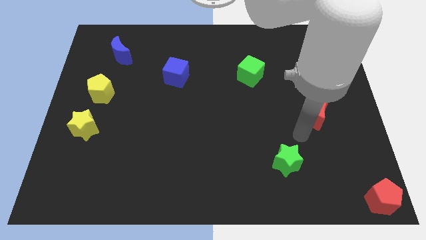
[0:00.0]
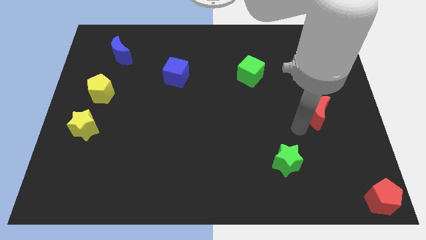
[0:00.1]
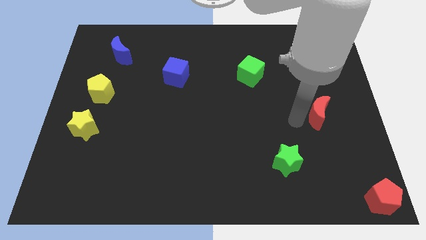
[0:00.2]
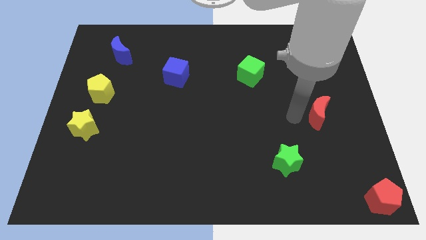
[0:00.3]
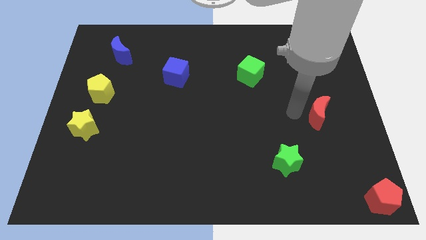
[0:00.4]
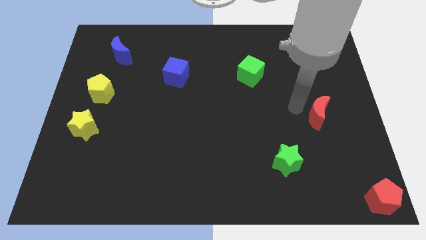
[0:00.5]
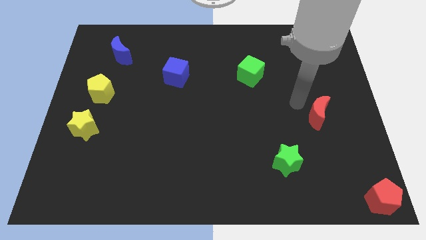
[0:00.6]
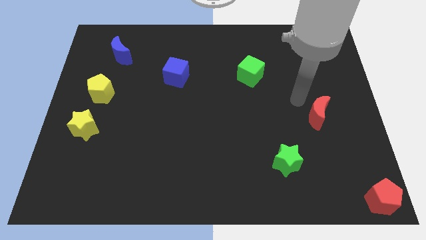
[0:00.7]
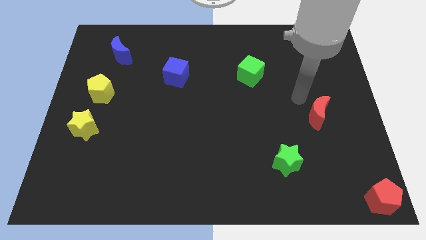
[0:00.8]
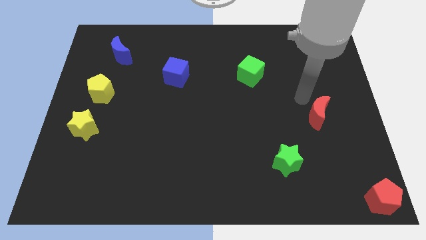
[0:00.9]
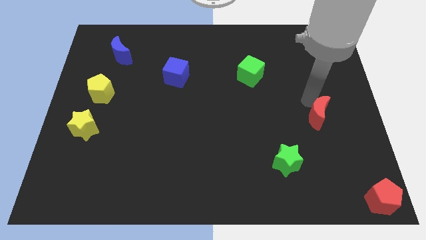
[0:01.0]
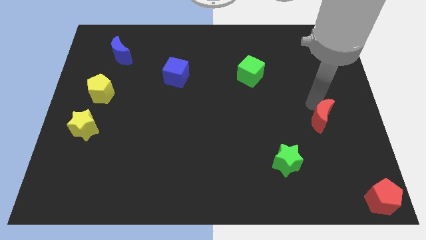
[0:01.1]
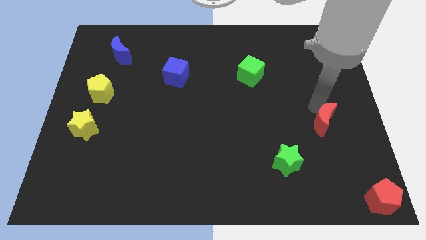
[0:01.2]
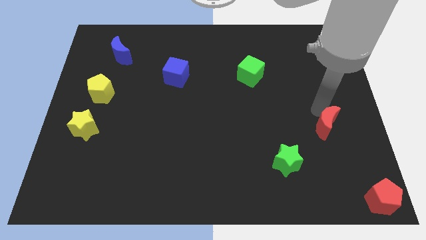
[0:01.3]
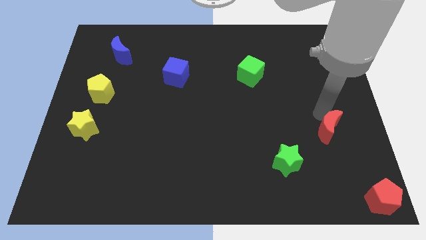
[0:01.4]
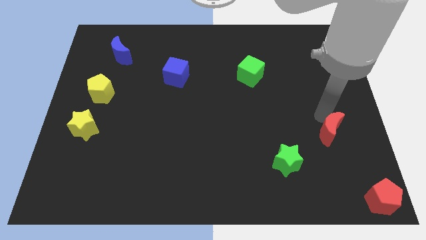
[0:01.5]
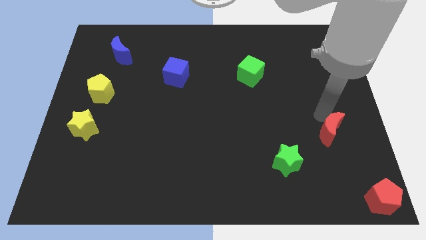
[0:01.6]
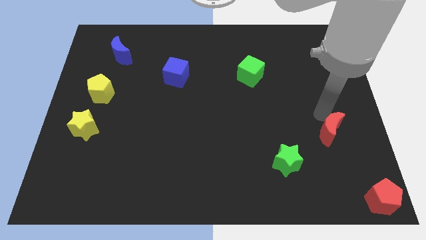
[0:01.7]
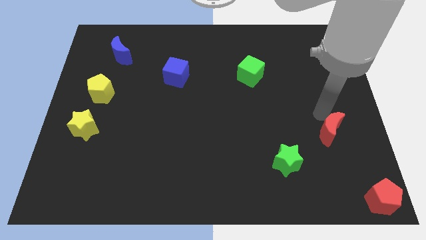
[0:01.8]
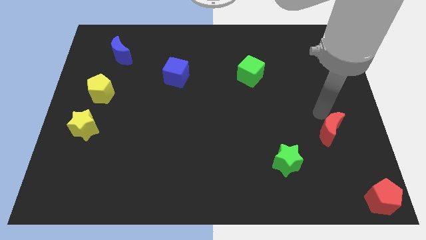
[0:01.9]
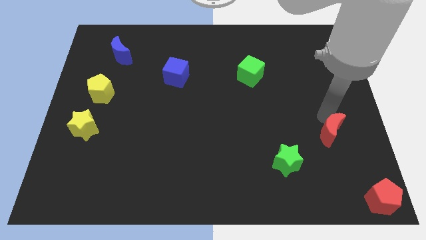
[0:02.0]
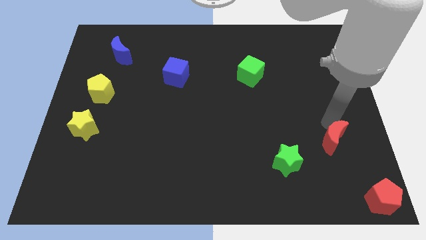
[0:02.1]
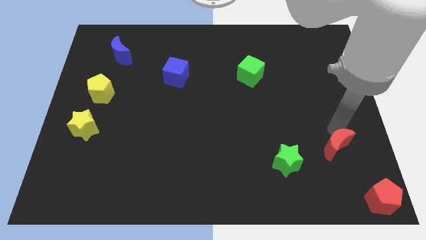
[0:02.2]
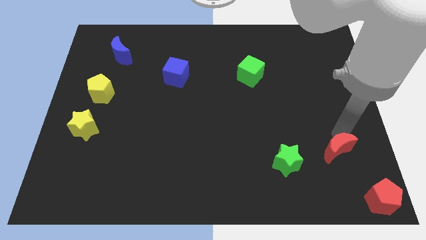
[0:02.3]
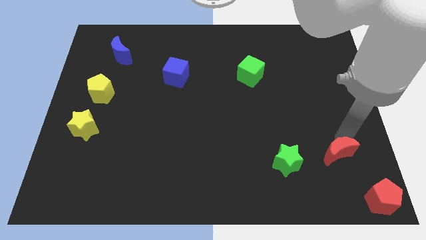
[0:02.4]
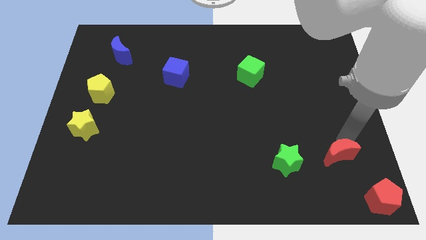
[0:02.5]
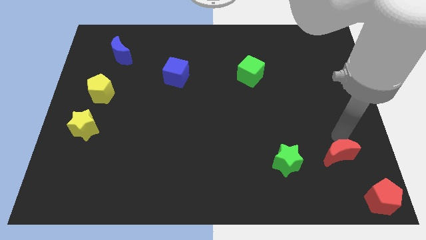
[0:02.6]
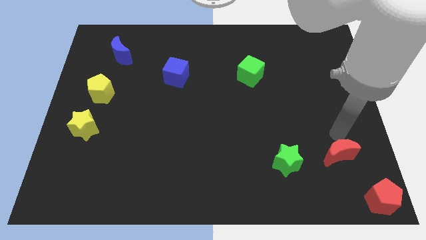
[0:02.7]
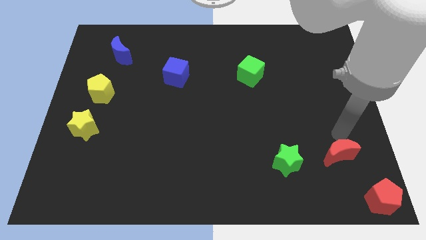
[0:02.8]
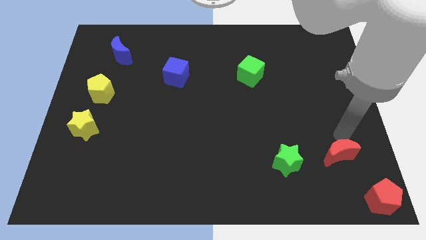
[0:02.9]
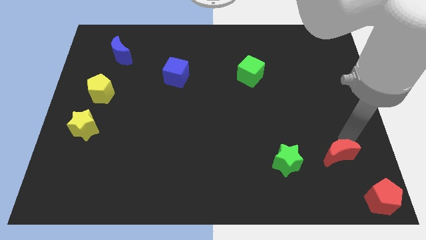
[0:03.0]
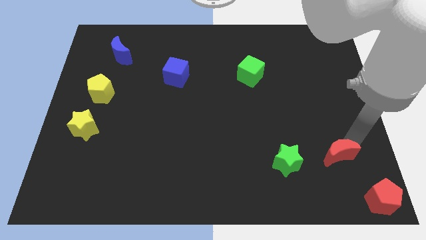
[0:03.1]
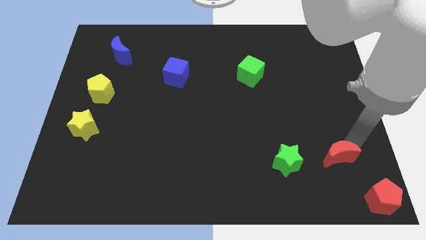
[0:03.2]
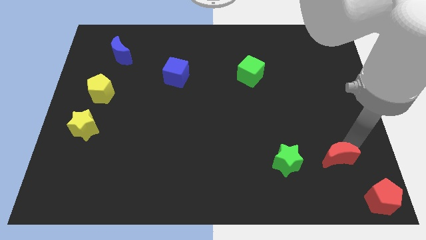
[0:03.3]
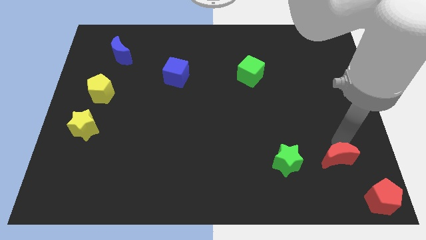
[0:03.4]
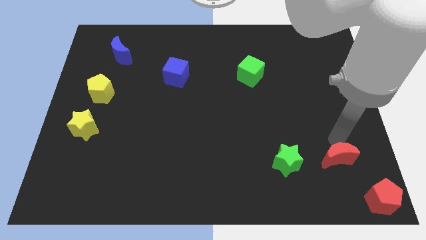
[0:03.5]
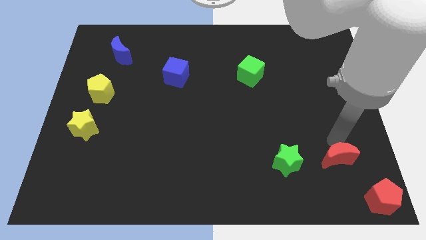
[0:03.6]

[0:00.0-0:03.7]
slide the red crescent slightly towards down

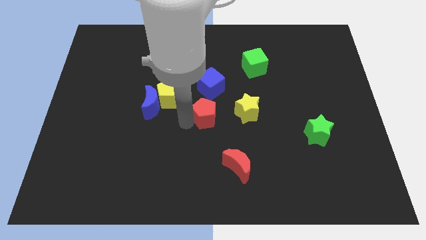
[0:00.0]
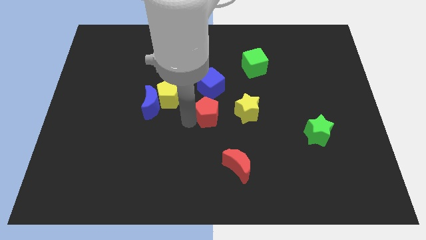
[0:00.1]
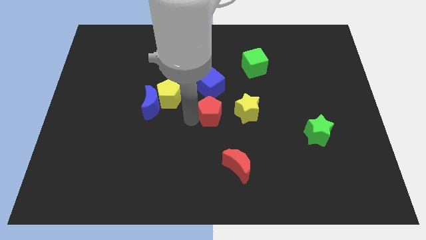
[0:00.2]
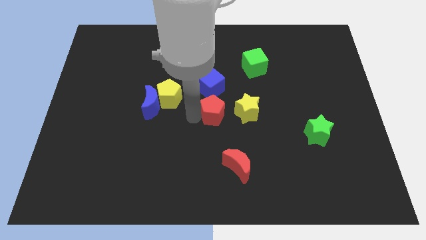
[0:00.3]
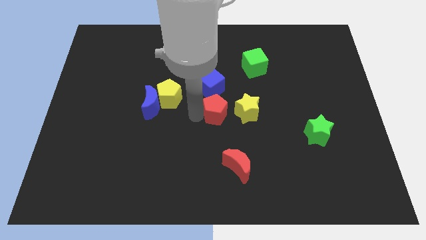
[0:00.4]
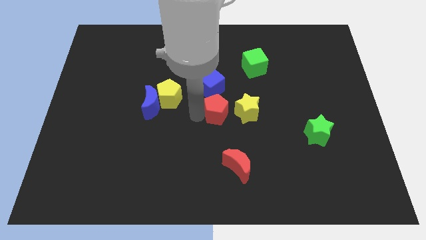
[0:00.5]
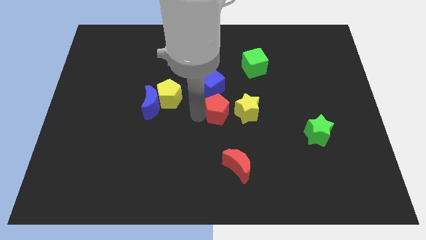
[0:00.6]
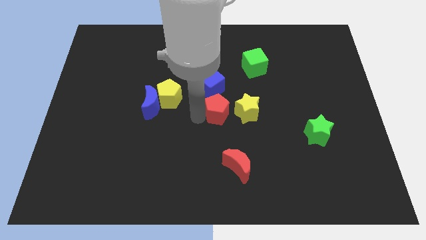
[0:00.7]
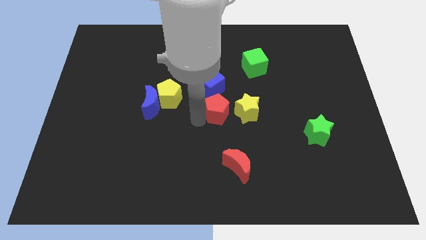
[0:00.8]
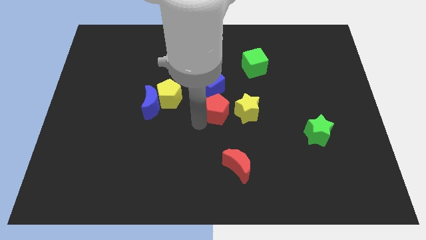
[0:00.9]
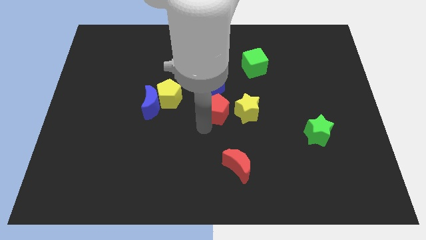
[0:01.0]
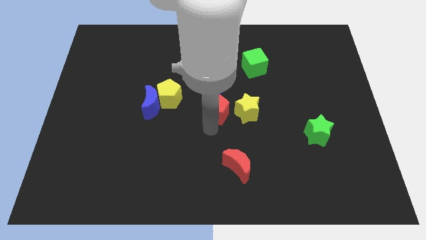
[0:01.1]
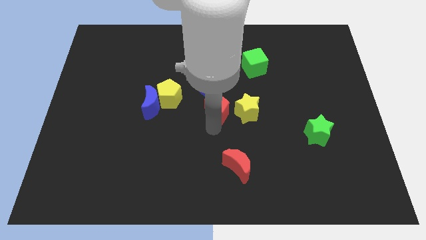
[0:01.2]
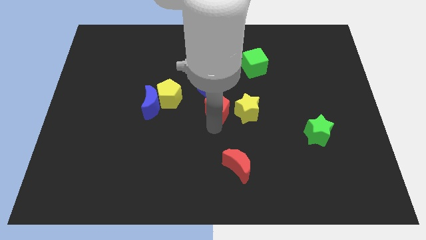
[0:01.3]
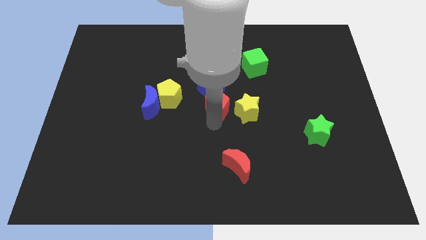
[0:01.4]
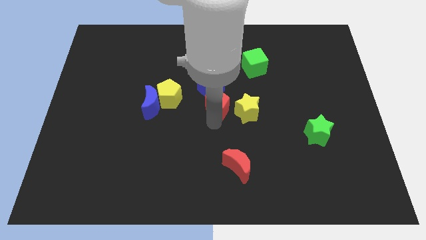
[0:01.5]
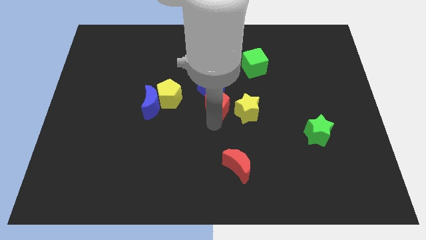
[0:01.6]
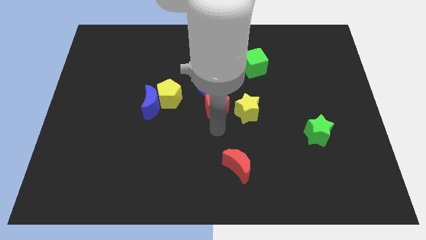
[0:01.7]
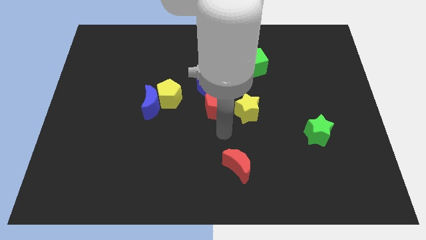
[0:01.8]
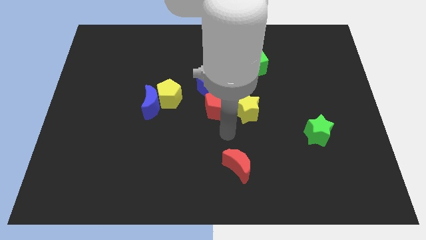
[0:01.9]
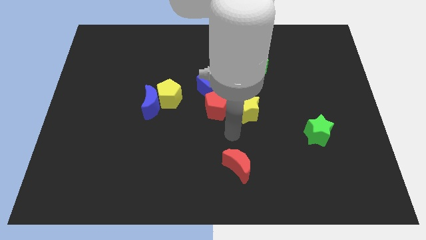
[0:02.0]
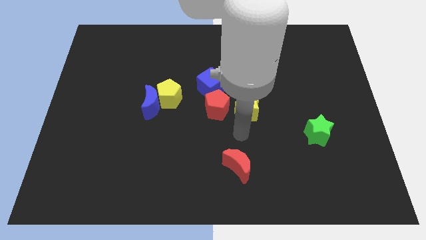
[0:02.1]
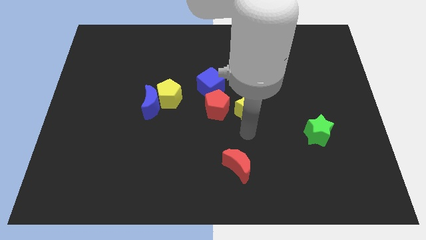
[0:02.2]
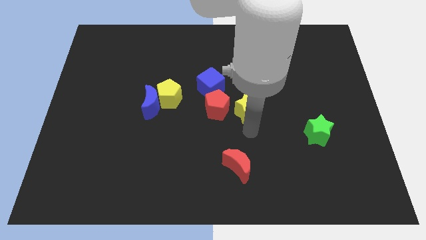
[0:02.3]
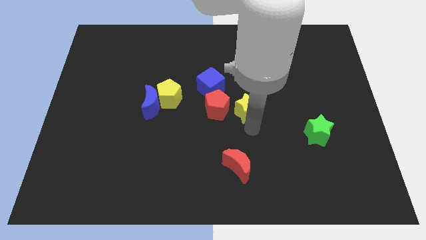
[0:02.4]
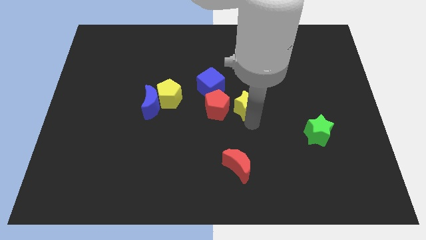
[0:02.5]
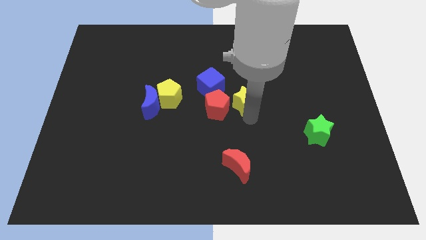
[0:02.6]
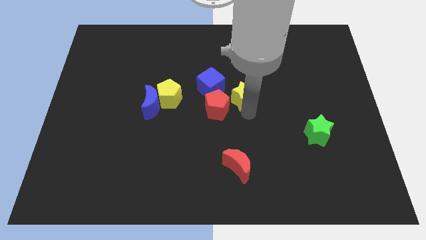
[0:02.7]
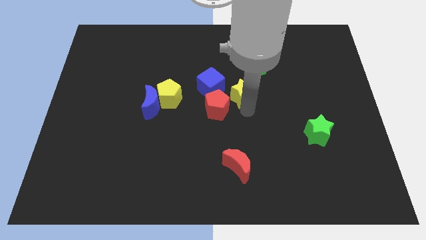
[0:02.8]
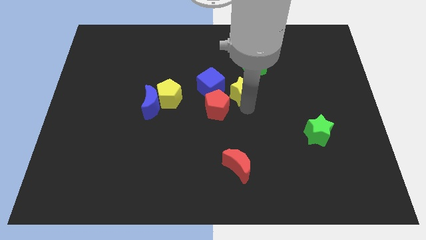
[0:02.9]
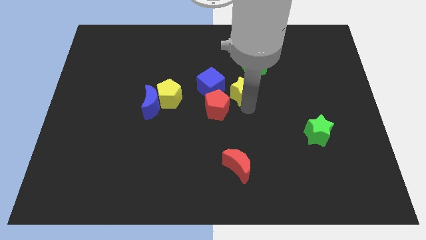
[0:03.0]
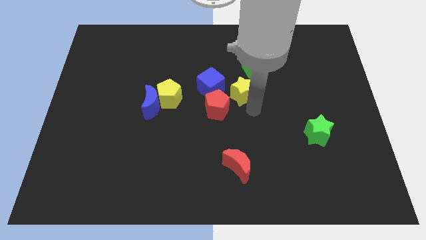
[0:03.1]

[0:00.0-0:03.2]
move the red pentagon and yellow star slightly towards top

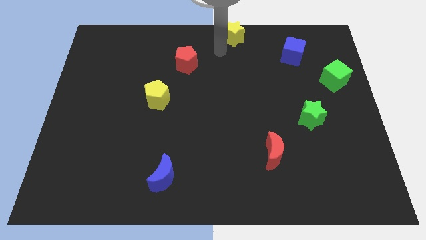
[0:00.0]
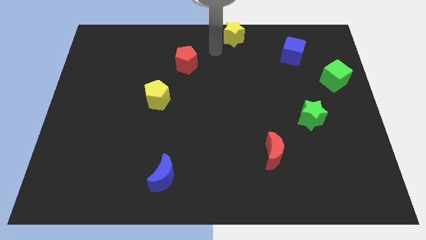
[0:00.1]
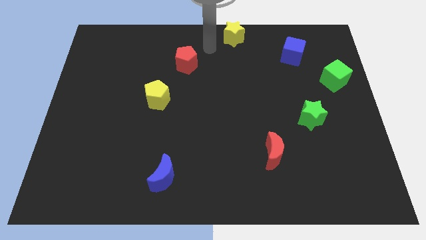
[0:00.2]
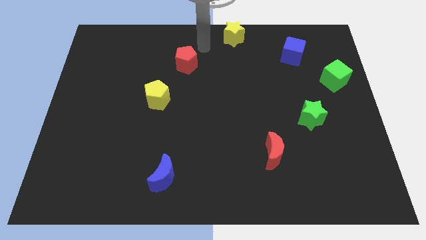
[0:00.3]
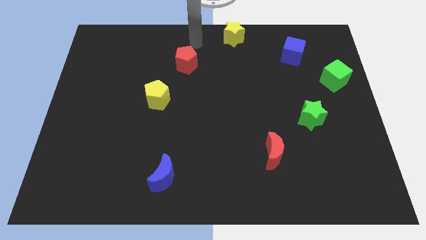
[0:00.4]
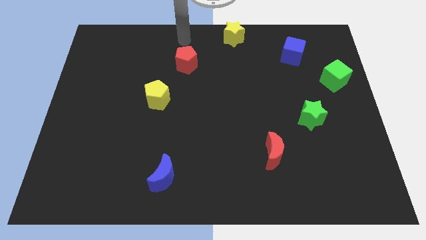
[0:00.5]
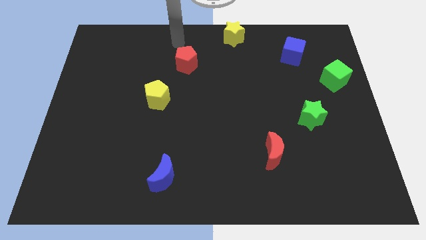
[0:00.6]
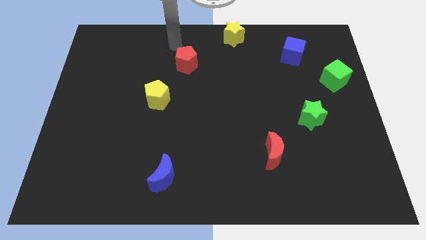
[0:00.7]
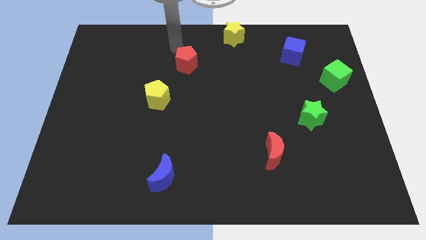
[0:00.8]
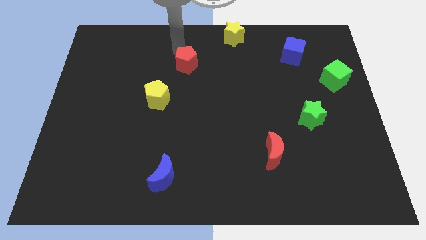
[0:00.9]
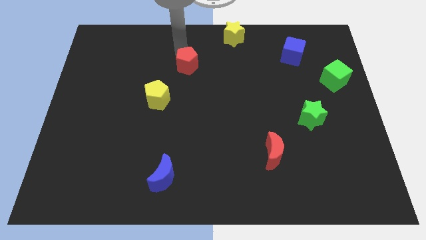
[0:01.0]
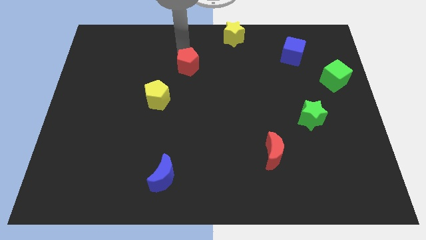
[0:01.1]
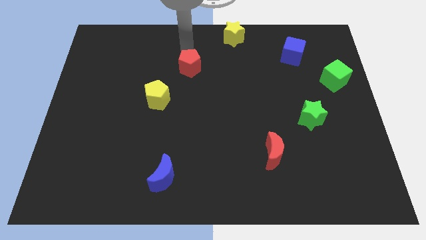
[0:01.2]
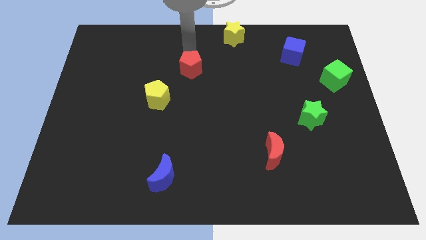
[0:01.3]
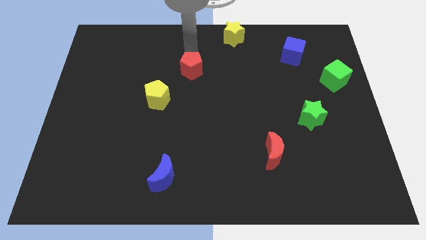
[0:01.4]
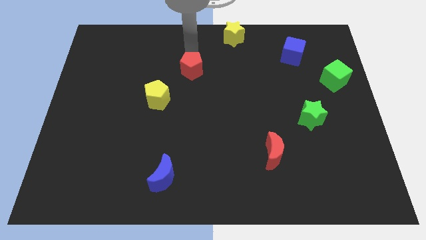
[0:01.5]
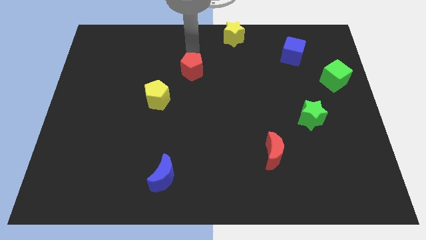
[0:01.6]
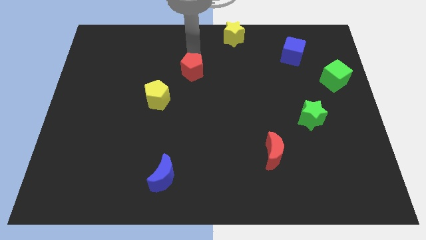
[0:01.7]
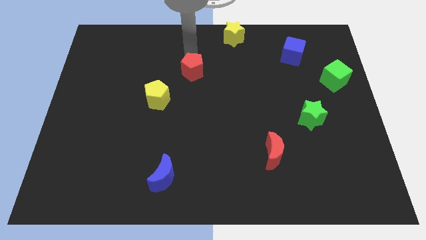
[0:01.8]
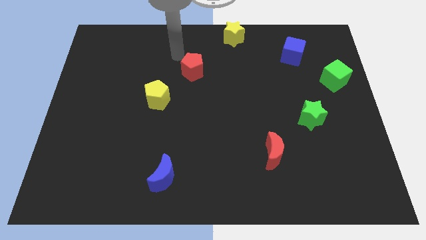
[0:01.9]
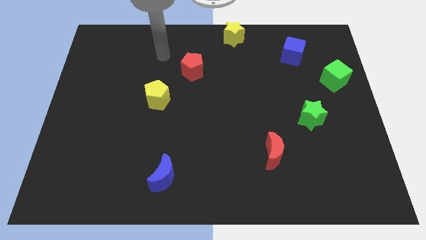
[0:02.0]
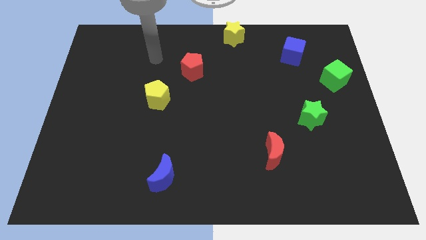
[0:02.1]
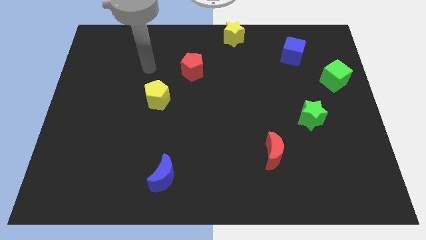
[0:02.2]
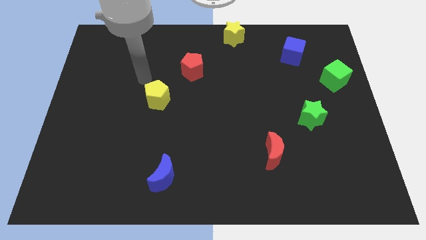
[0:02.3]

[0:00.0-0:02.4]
move the red pentagon slightly to the center of the board
